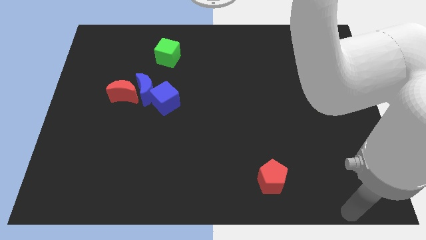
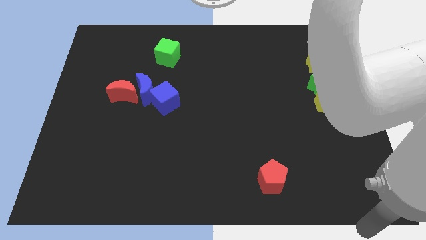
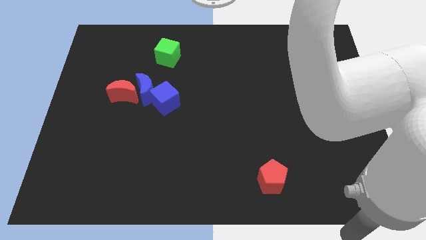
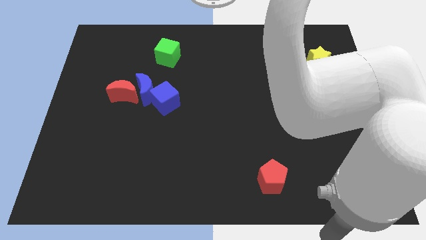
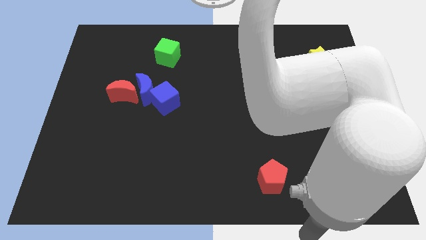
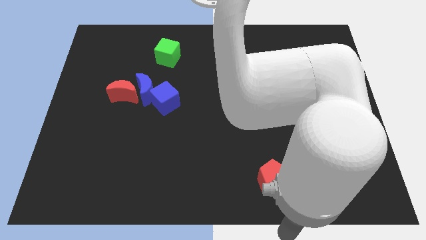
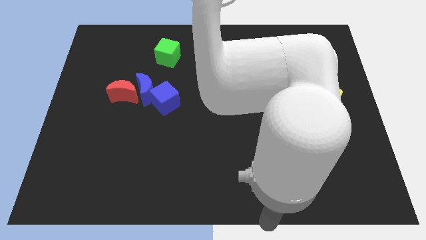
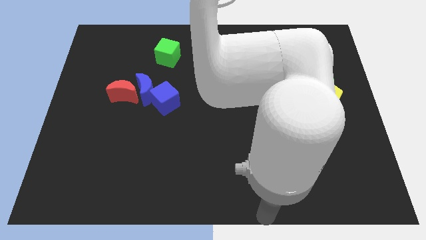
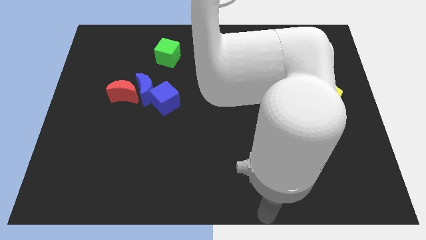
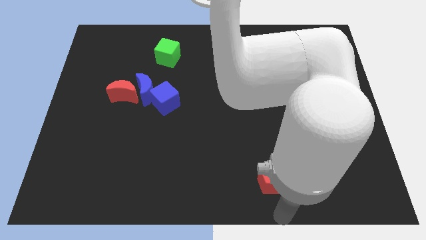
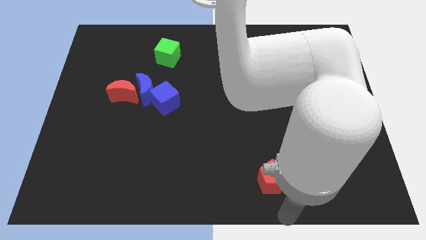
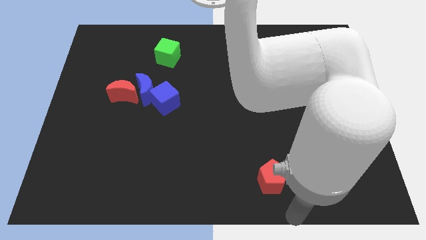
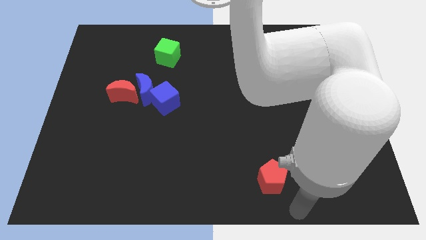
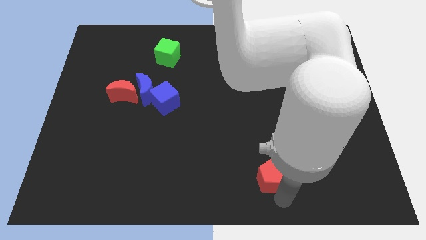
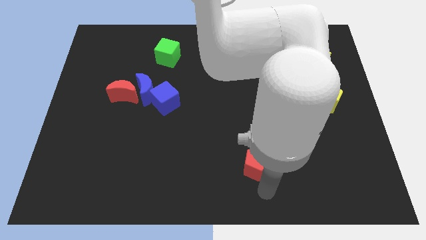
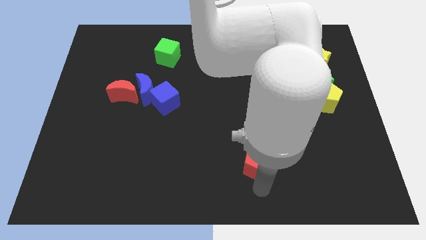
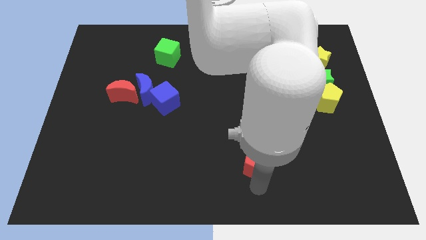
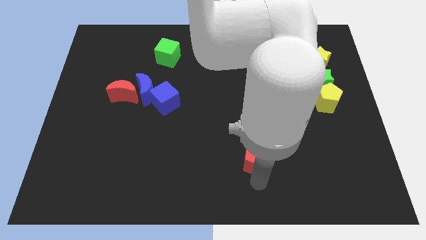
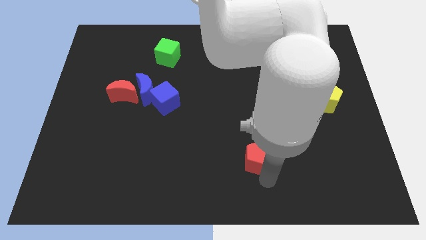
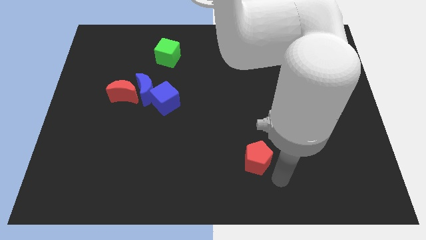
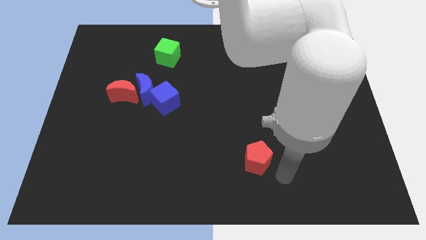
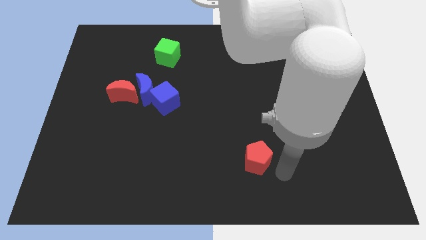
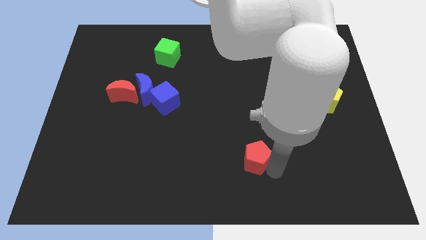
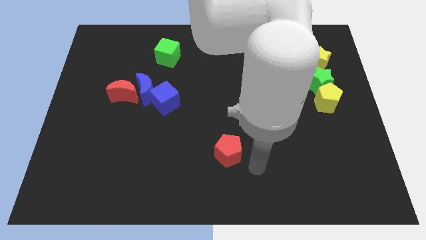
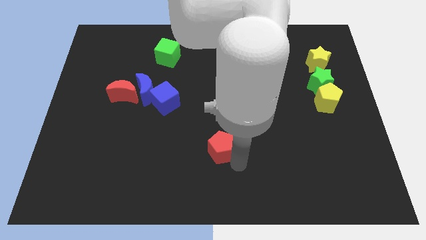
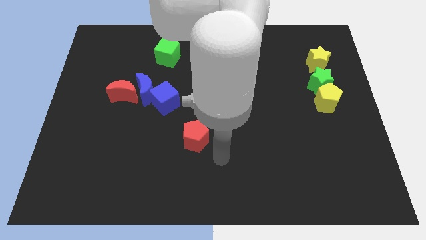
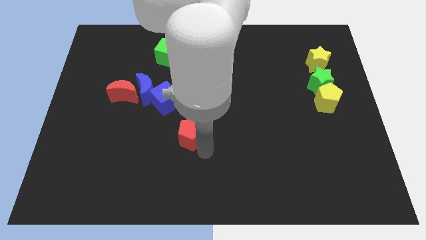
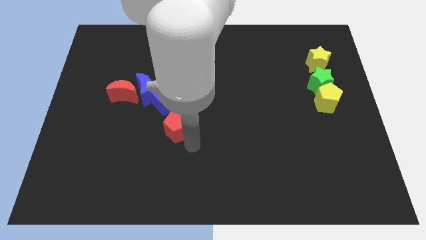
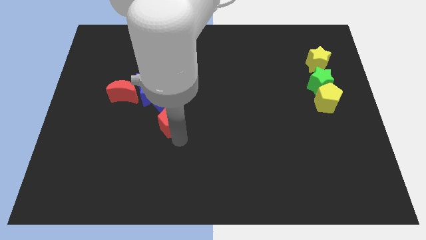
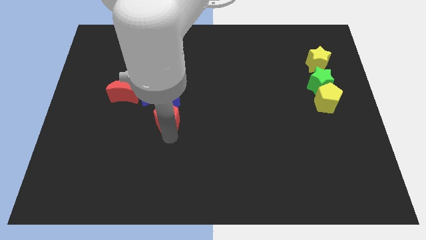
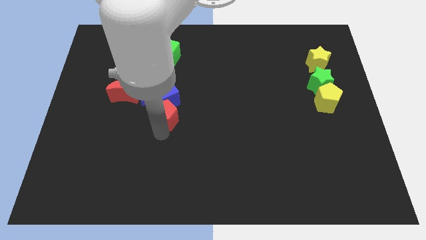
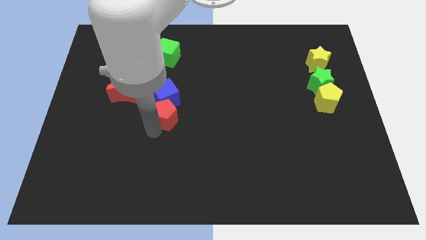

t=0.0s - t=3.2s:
move the red pentagon at the bottom side of the blue cube

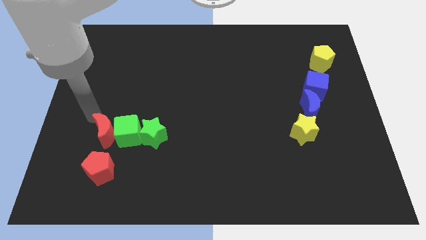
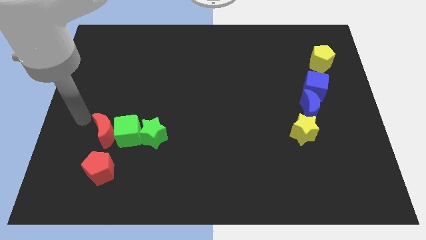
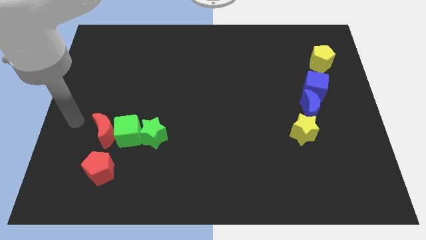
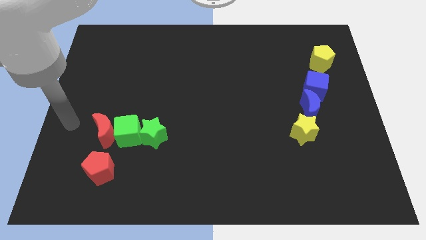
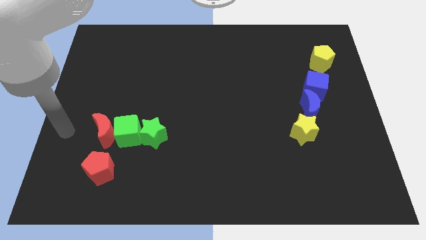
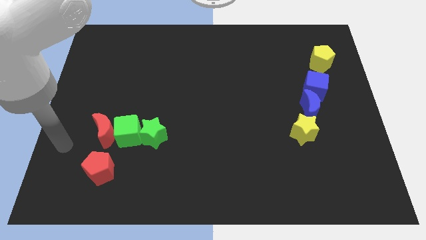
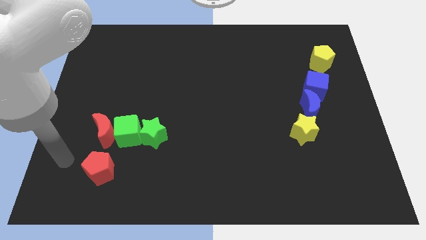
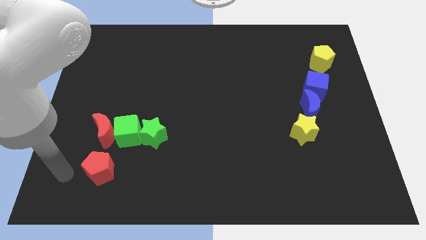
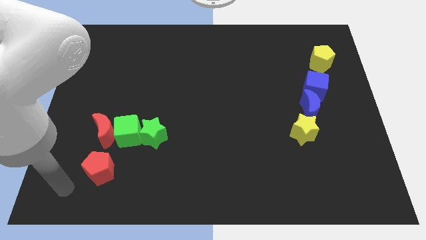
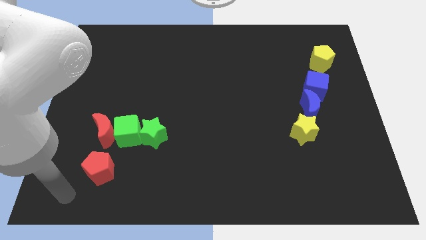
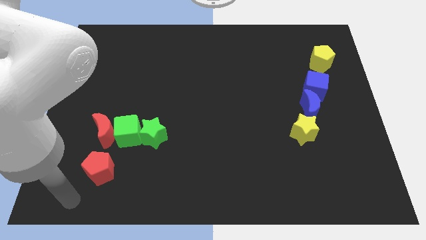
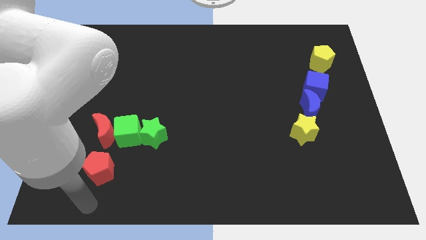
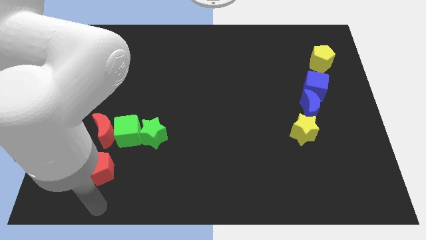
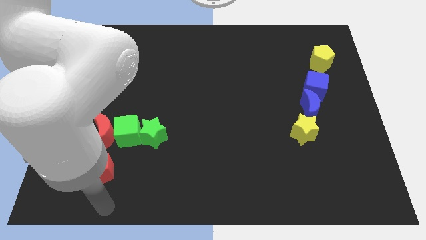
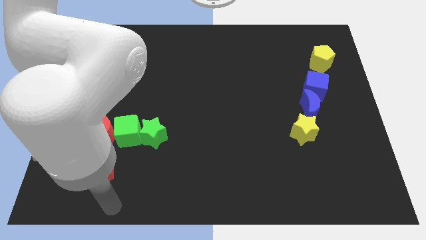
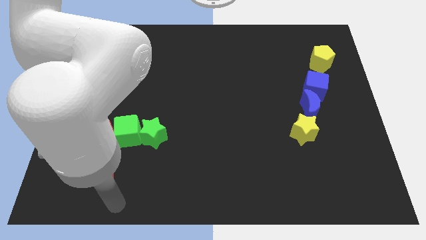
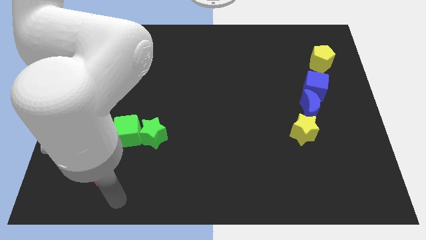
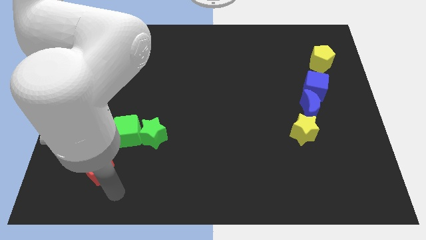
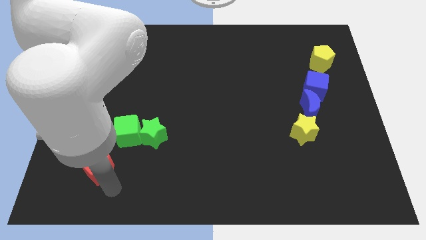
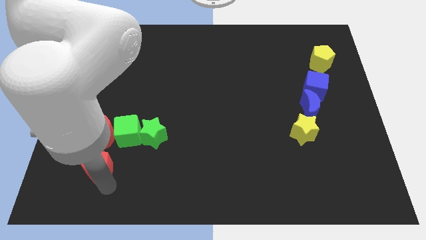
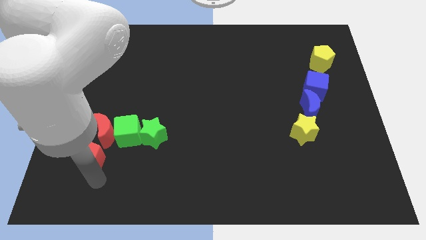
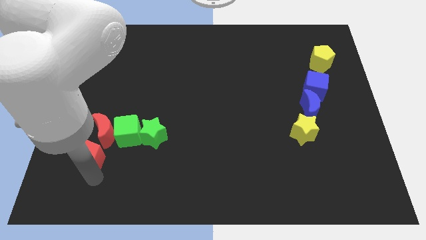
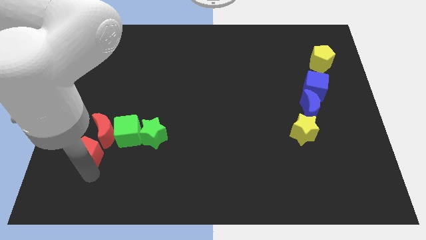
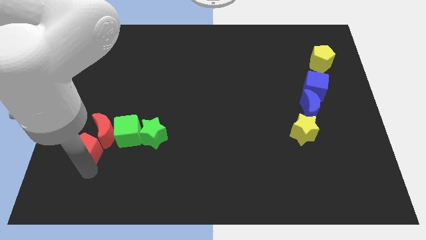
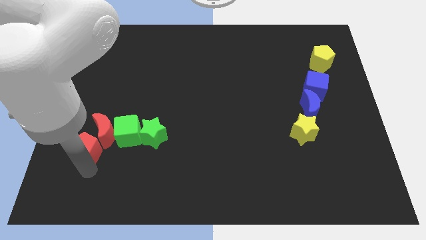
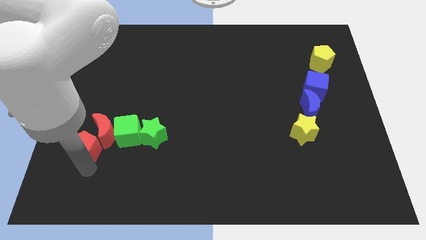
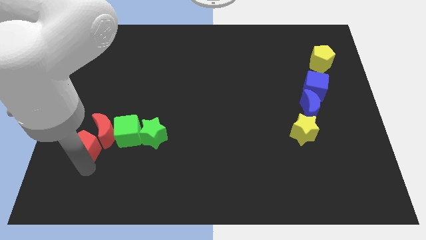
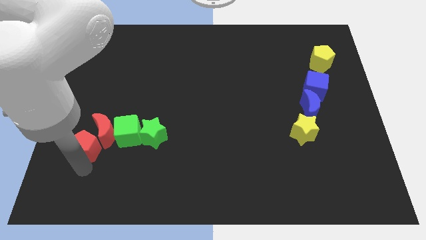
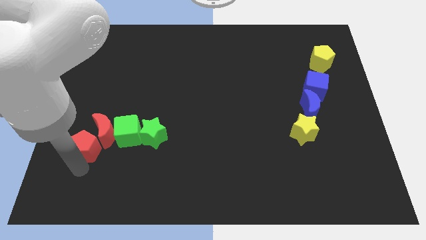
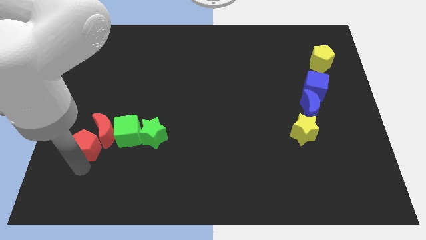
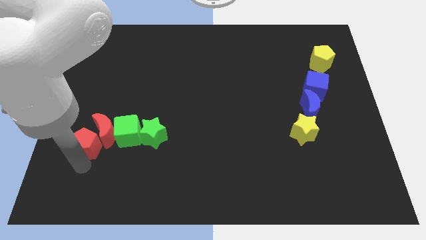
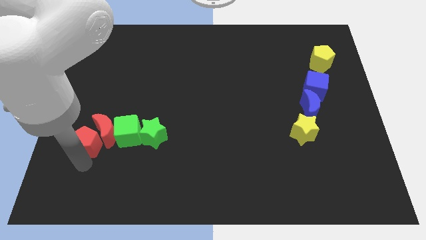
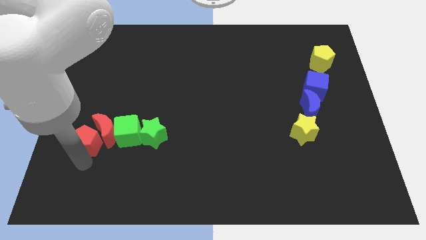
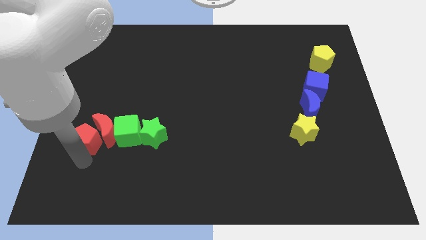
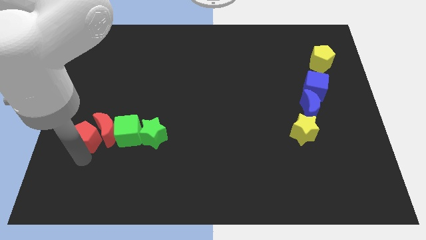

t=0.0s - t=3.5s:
move the red pentagon into the red moon

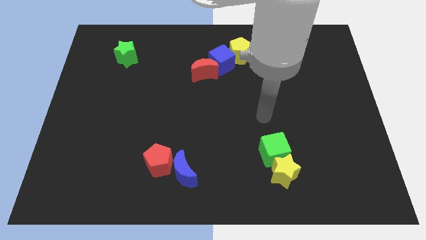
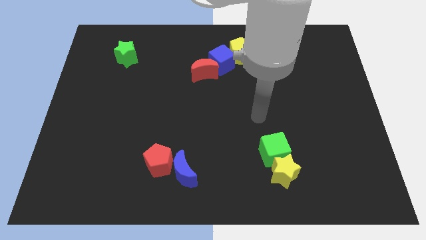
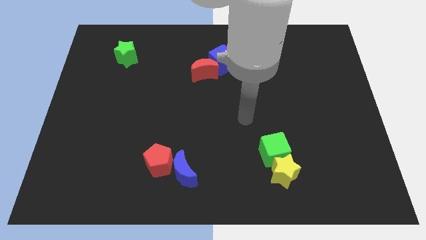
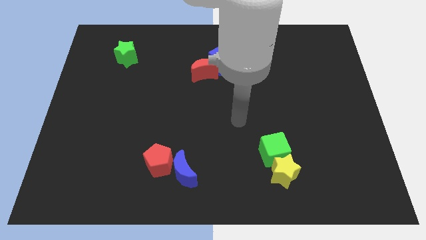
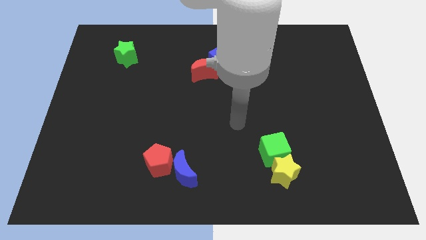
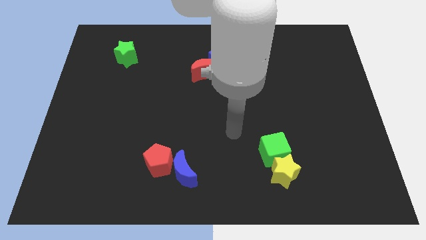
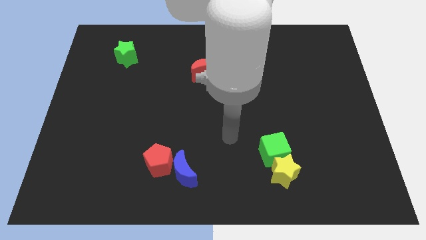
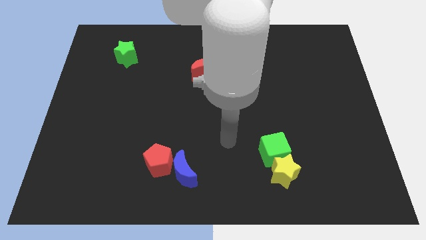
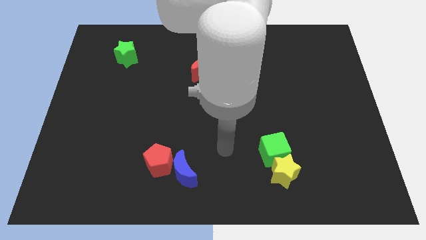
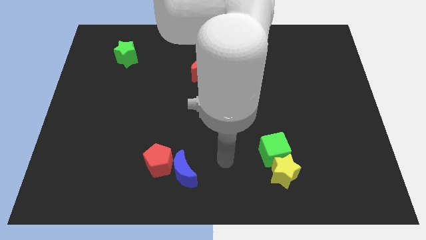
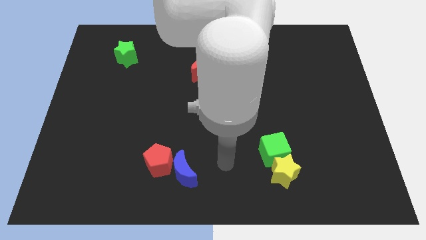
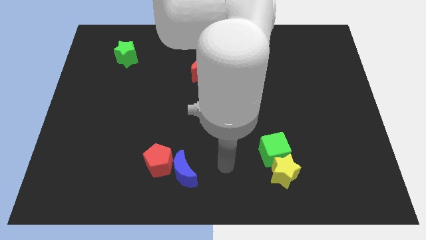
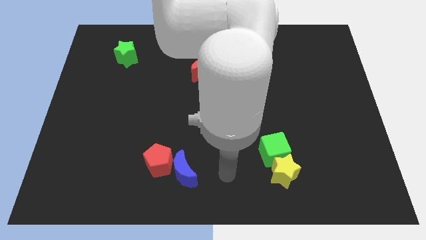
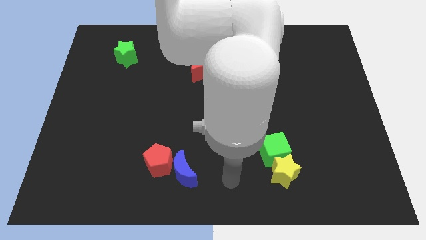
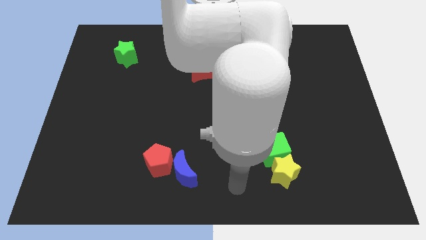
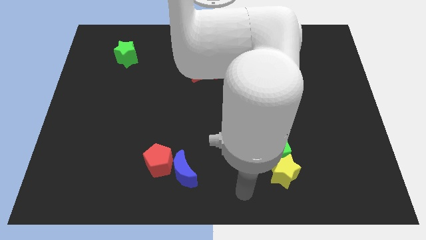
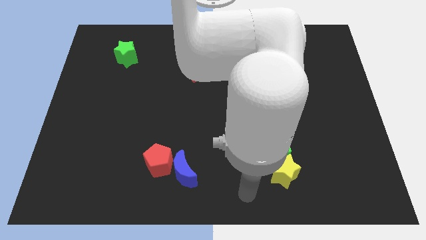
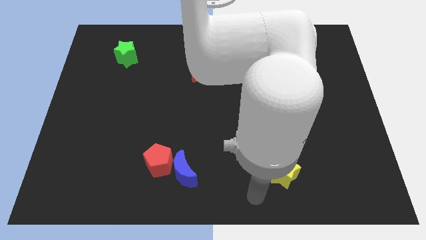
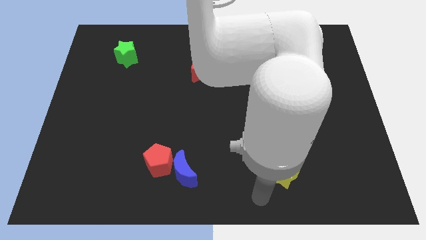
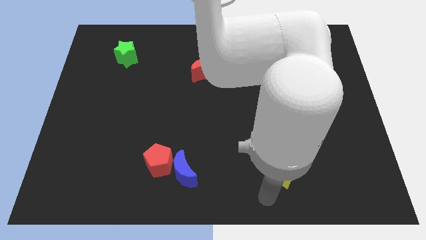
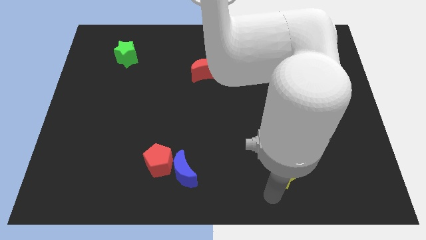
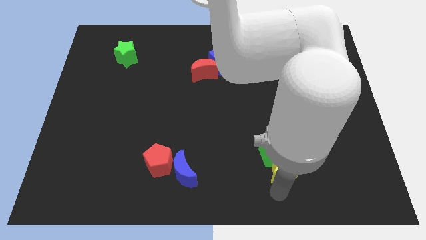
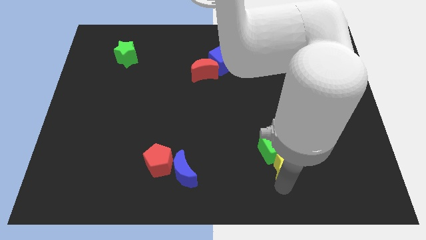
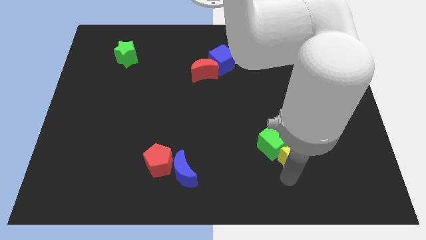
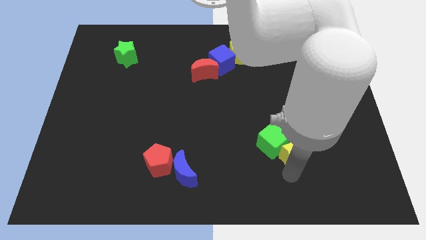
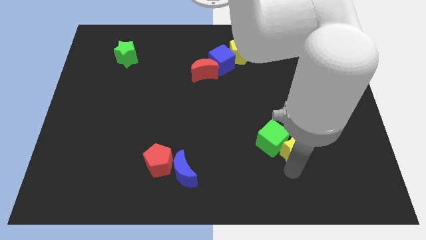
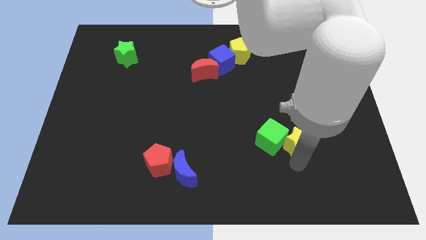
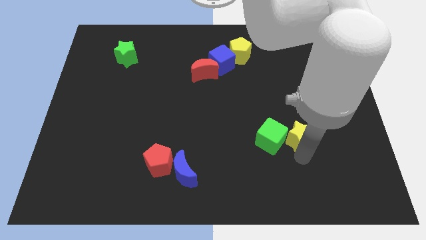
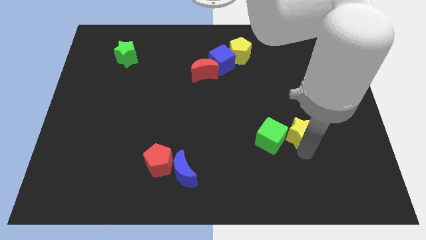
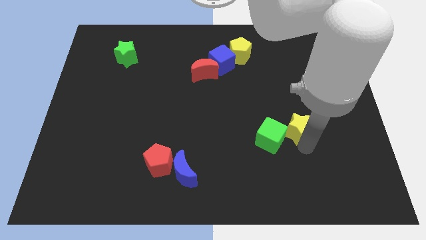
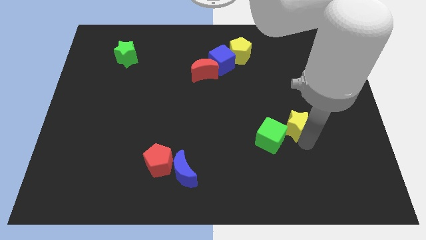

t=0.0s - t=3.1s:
push the yellow star to the right of the green cube
